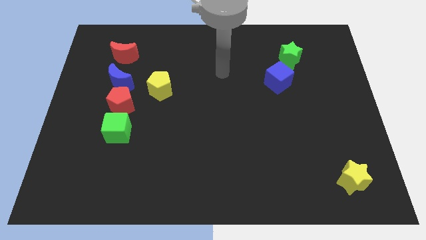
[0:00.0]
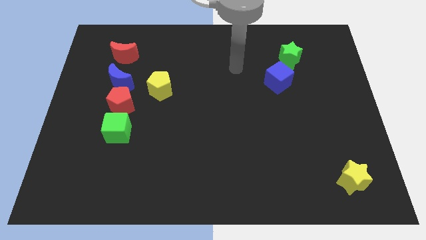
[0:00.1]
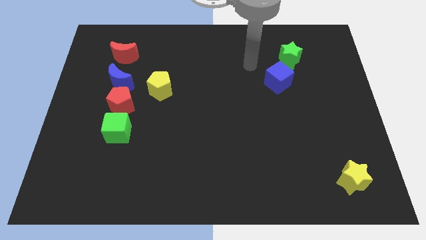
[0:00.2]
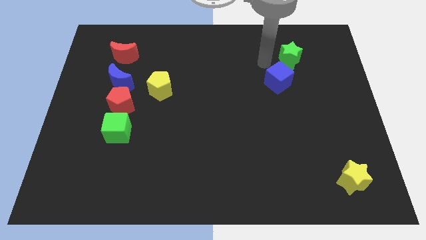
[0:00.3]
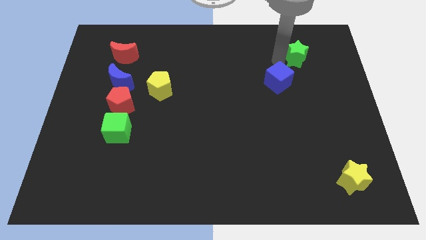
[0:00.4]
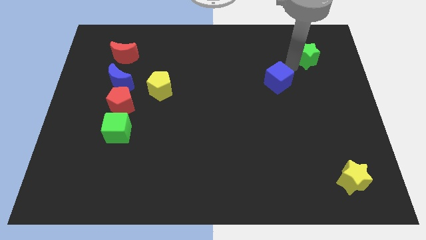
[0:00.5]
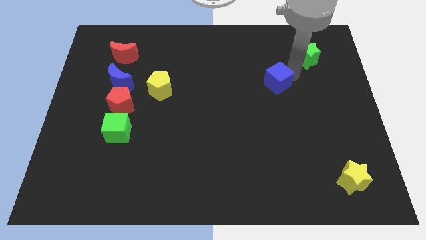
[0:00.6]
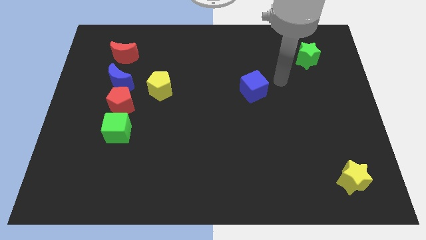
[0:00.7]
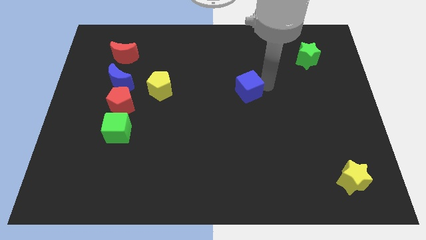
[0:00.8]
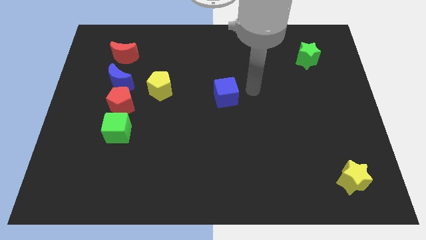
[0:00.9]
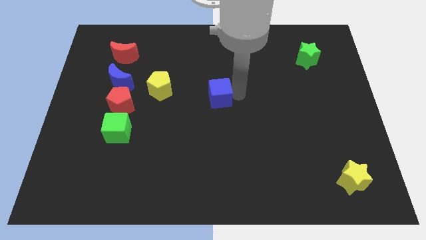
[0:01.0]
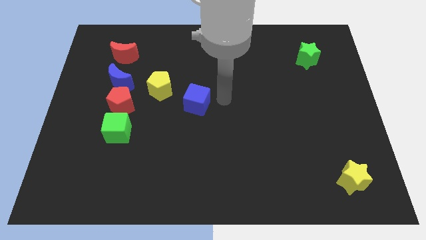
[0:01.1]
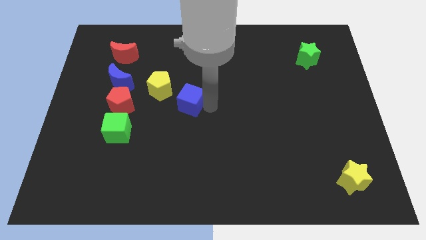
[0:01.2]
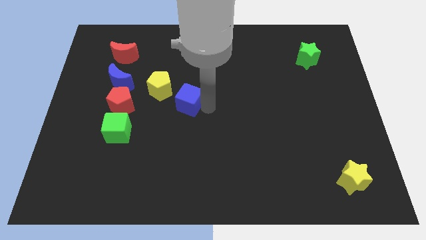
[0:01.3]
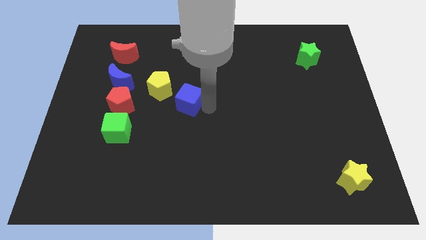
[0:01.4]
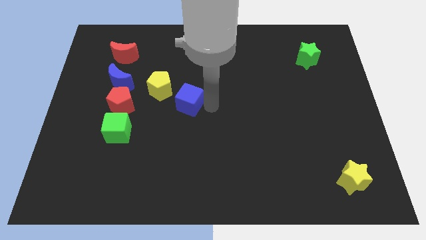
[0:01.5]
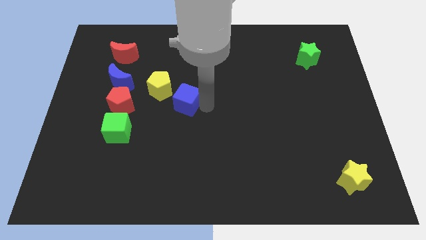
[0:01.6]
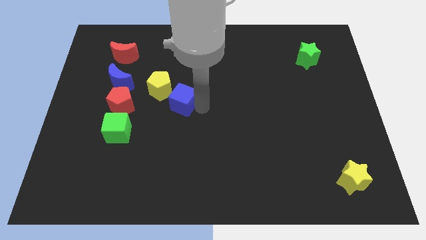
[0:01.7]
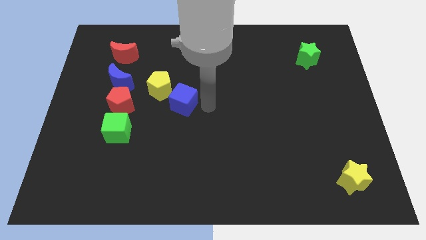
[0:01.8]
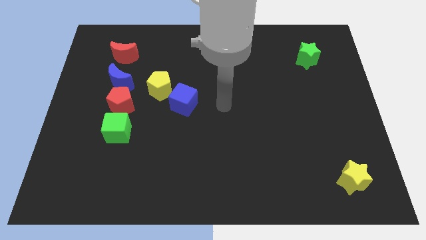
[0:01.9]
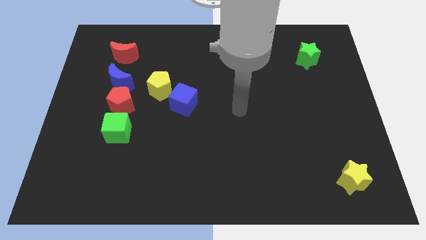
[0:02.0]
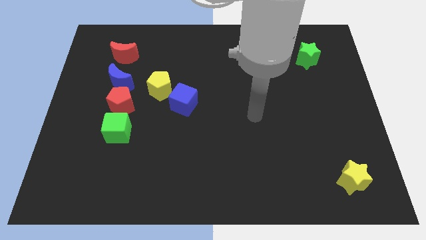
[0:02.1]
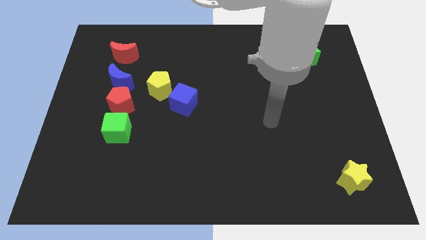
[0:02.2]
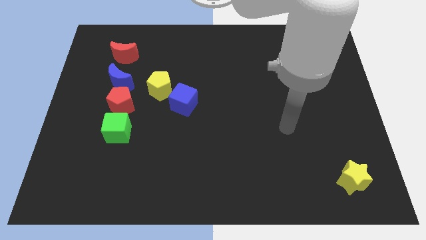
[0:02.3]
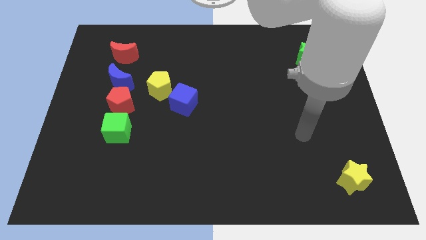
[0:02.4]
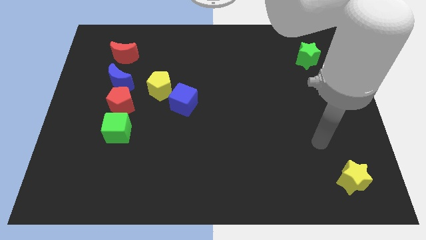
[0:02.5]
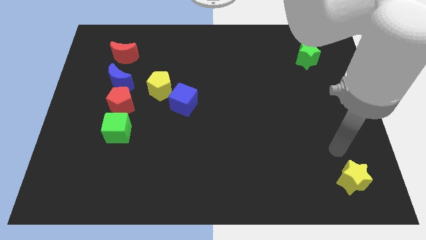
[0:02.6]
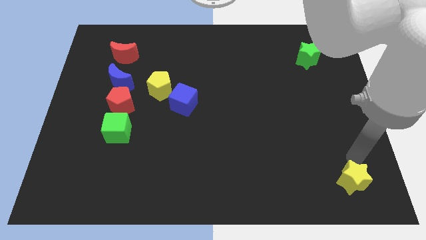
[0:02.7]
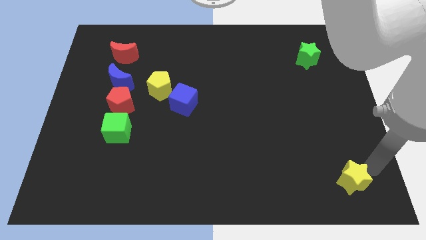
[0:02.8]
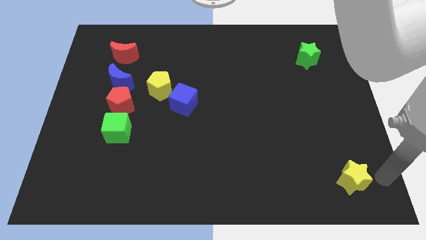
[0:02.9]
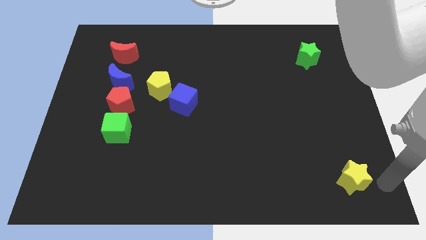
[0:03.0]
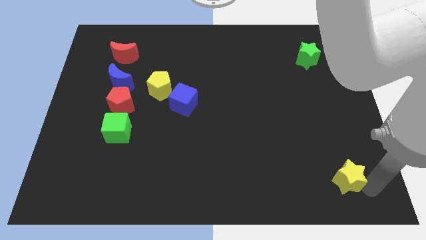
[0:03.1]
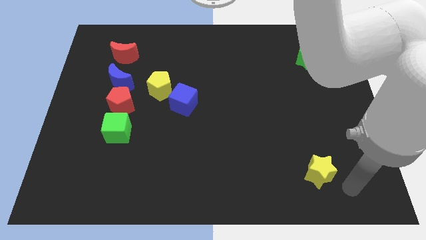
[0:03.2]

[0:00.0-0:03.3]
place the blue cube right to the red pentagon

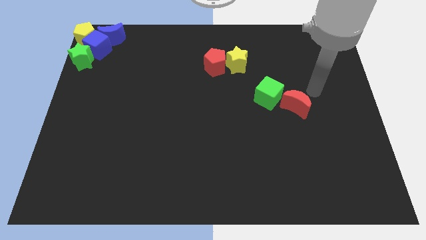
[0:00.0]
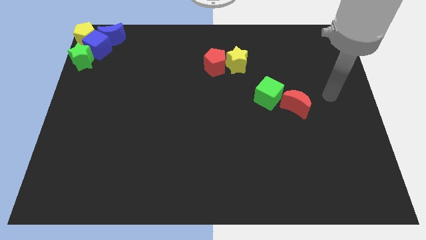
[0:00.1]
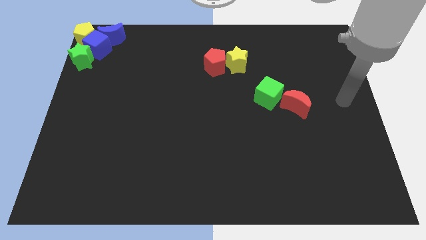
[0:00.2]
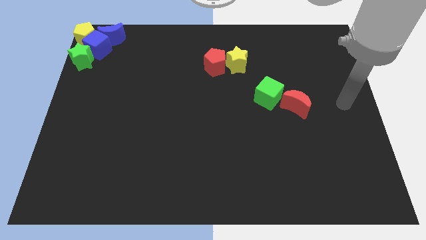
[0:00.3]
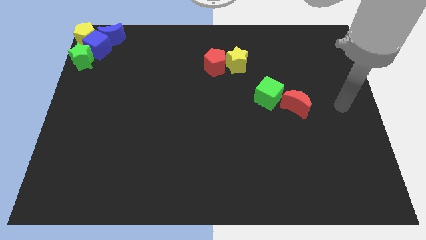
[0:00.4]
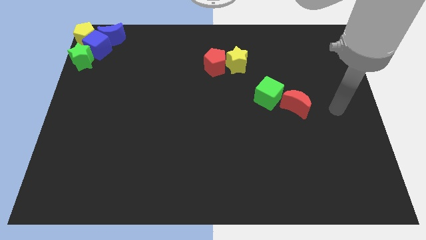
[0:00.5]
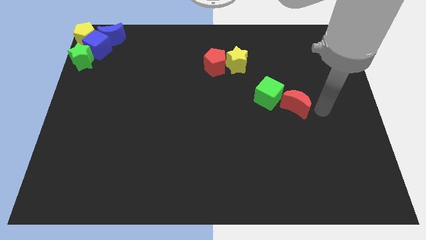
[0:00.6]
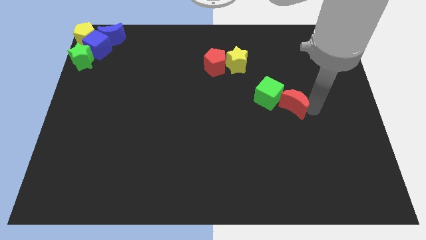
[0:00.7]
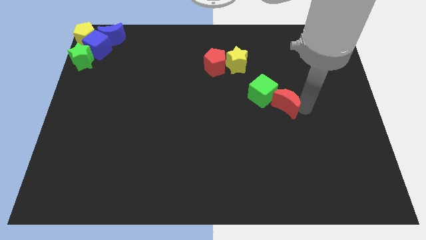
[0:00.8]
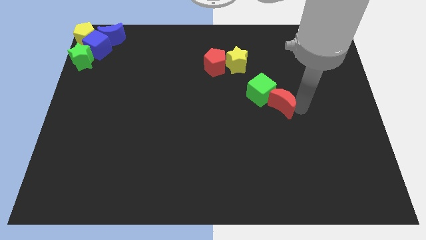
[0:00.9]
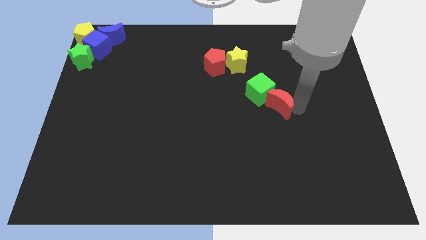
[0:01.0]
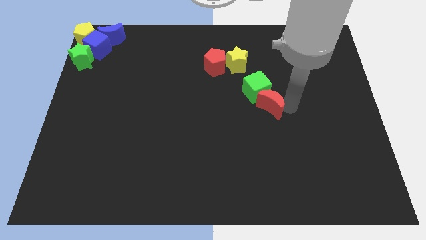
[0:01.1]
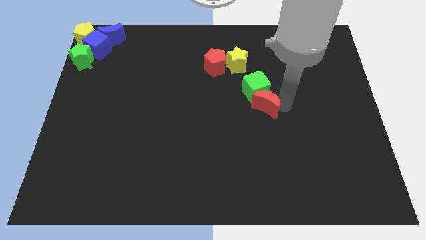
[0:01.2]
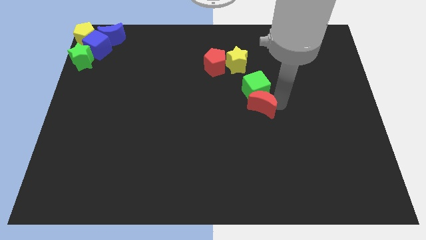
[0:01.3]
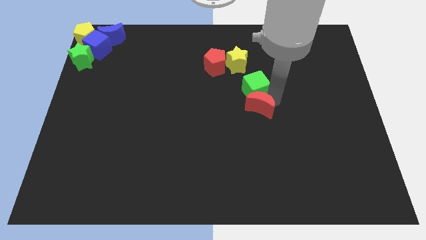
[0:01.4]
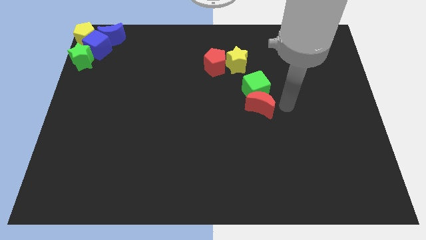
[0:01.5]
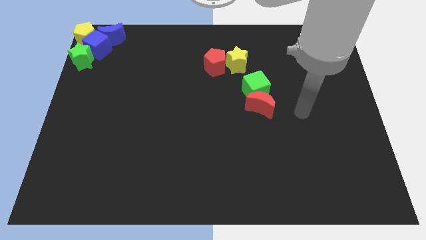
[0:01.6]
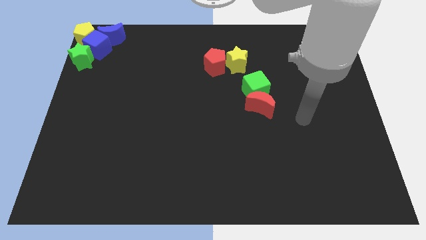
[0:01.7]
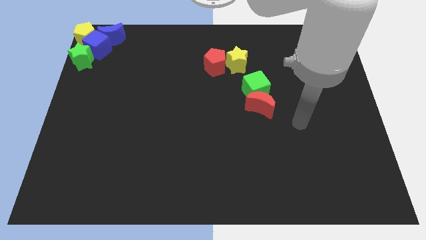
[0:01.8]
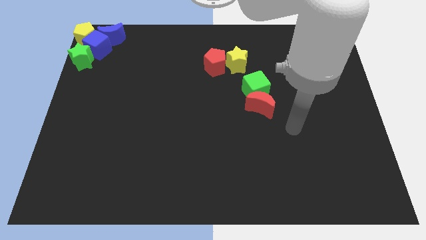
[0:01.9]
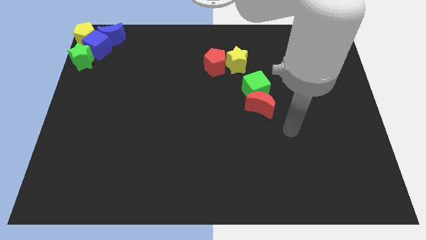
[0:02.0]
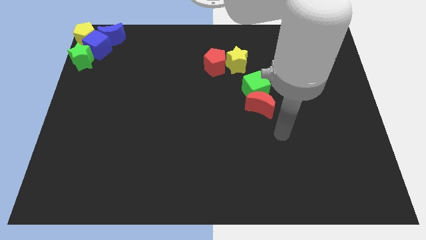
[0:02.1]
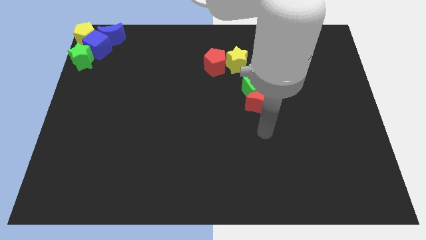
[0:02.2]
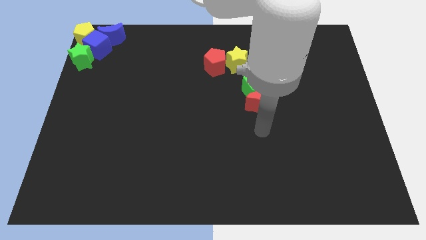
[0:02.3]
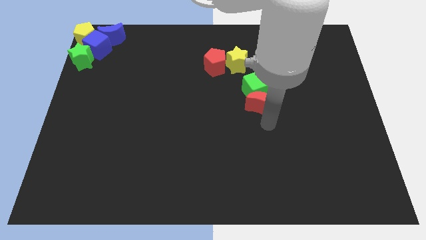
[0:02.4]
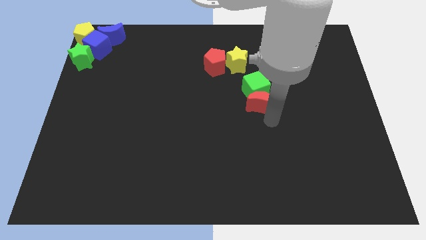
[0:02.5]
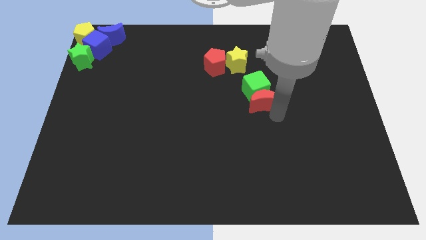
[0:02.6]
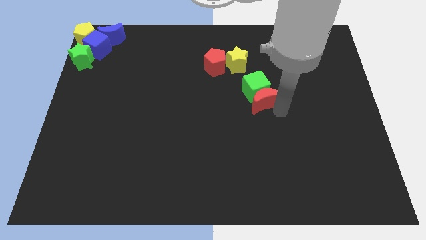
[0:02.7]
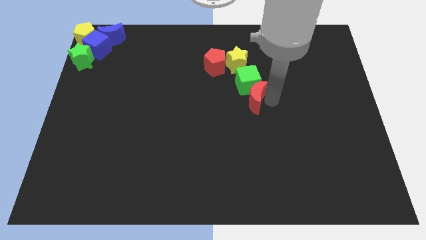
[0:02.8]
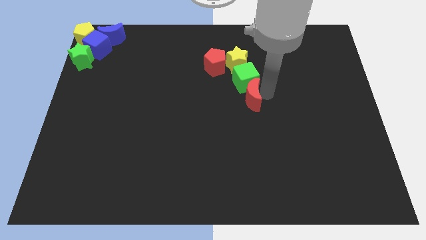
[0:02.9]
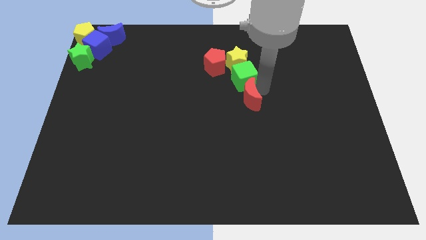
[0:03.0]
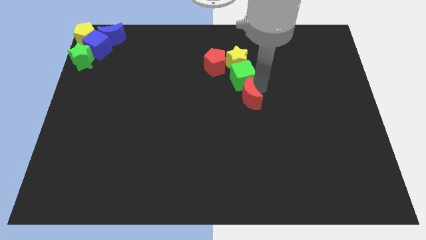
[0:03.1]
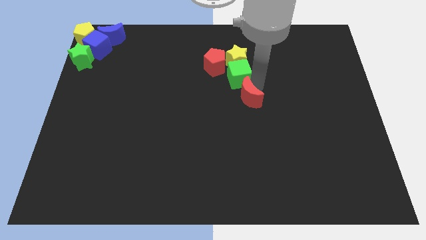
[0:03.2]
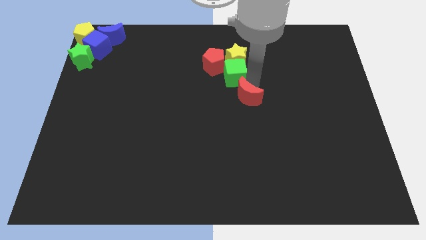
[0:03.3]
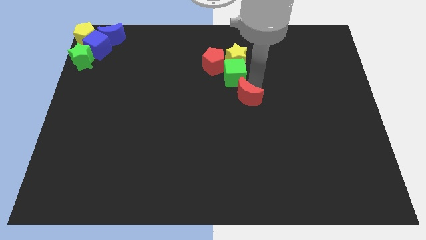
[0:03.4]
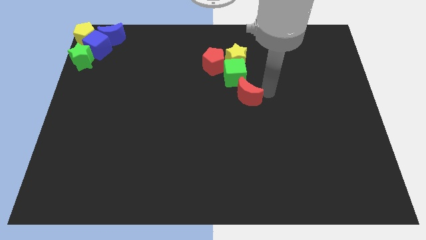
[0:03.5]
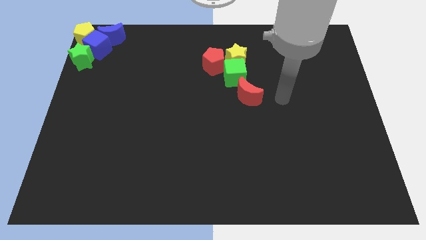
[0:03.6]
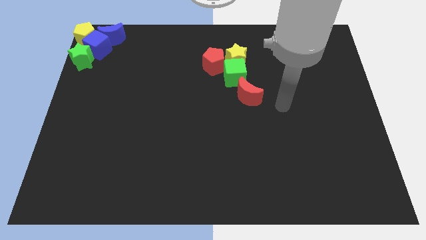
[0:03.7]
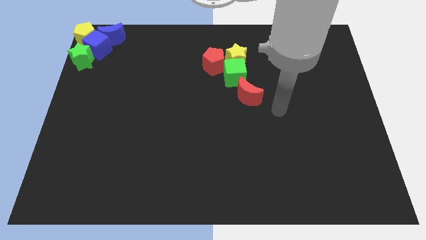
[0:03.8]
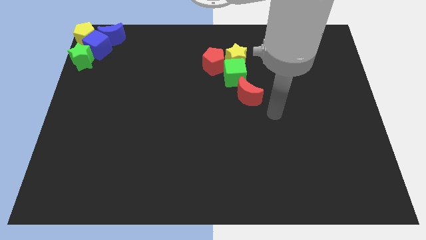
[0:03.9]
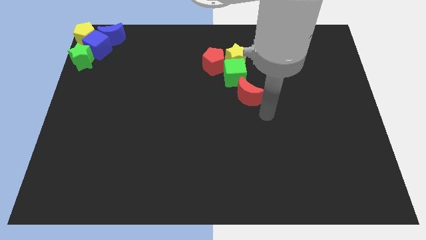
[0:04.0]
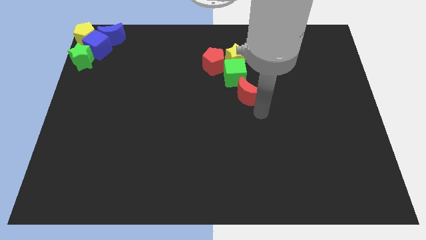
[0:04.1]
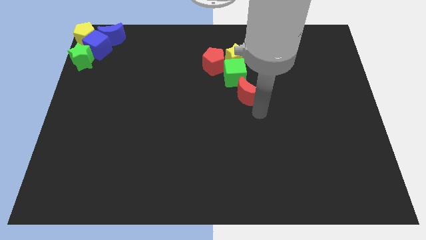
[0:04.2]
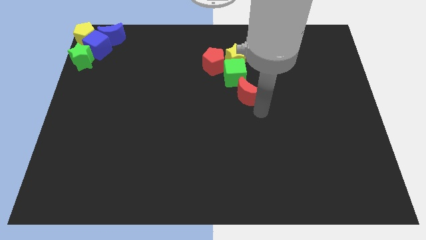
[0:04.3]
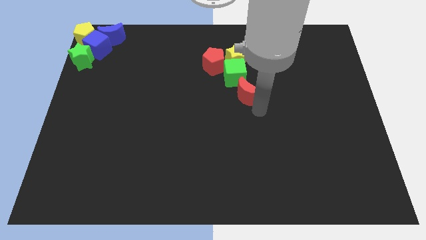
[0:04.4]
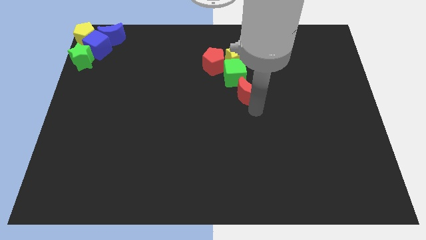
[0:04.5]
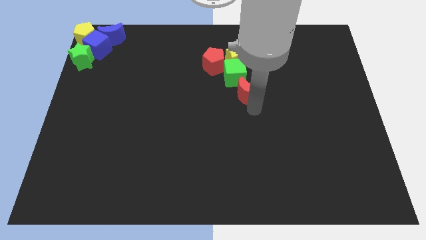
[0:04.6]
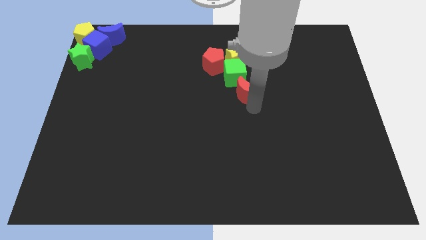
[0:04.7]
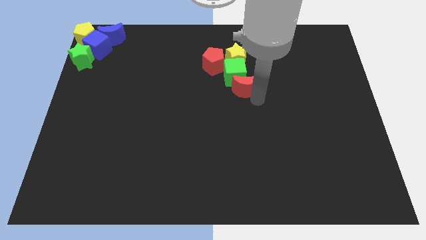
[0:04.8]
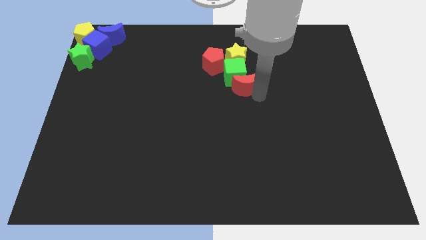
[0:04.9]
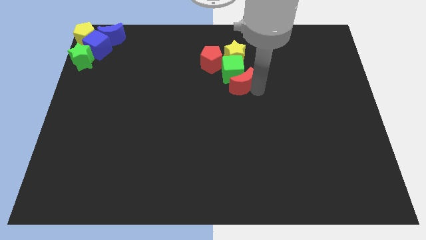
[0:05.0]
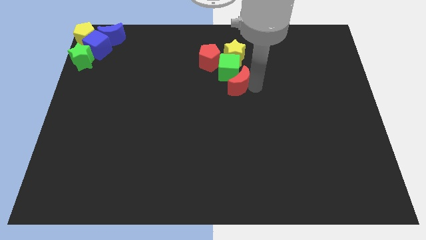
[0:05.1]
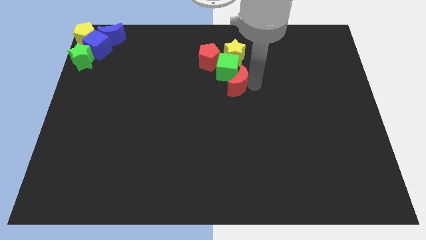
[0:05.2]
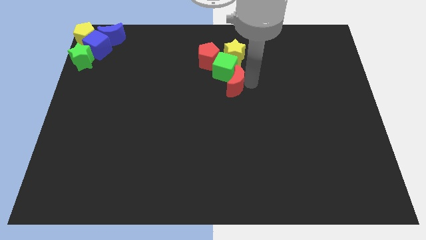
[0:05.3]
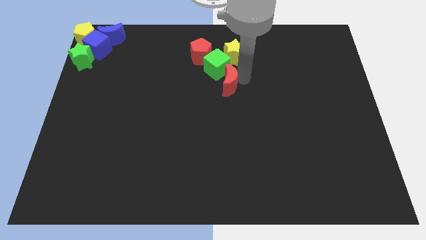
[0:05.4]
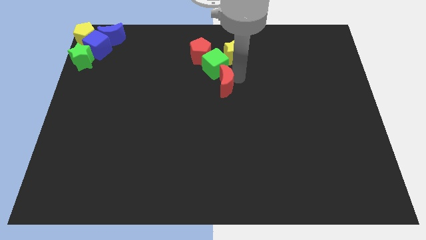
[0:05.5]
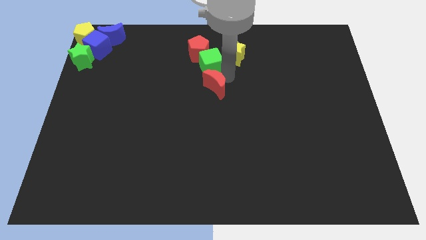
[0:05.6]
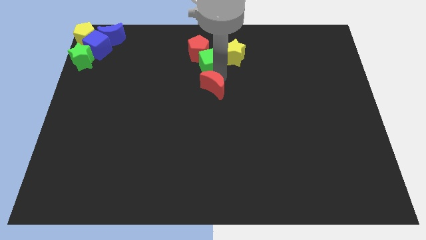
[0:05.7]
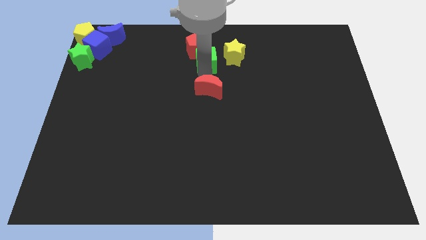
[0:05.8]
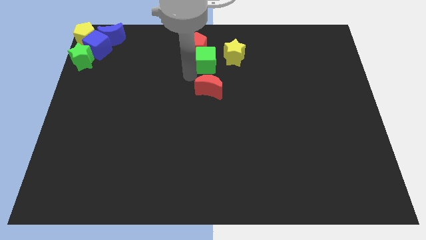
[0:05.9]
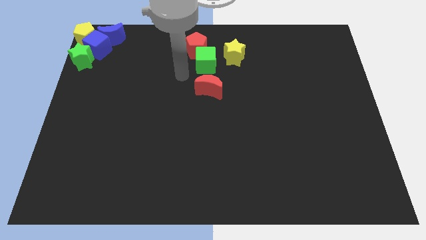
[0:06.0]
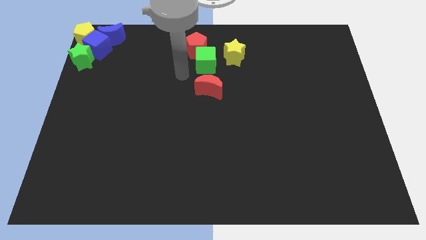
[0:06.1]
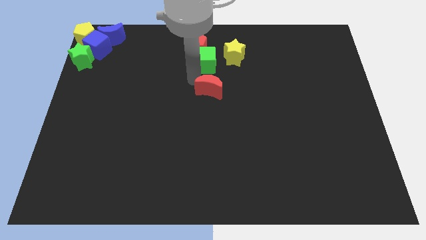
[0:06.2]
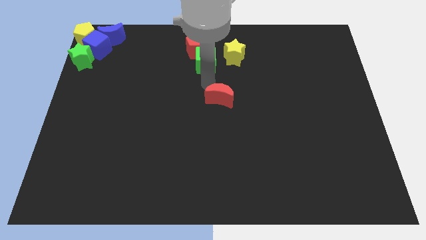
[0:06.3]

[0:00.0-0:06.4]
push the red moon along with the green cube into the yellow star
